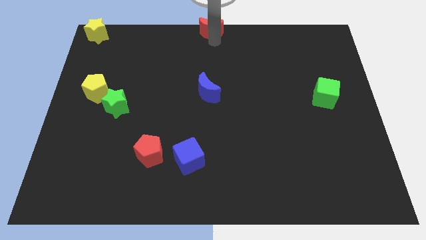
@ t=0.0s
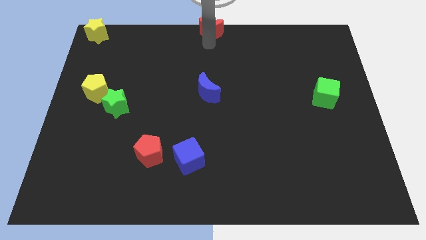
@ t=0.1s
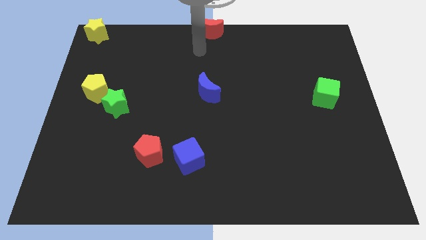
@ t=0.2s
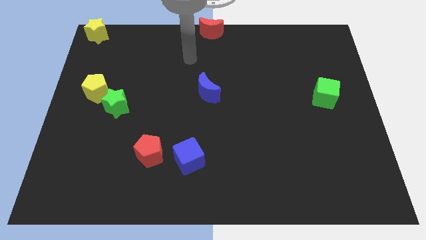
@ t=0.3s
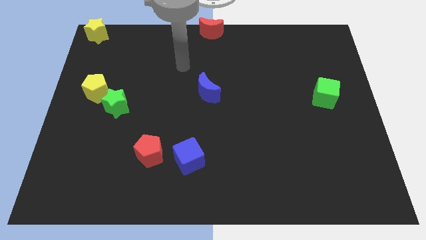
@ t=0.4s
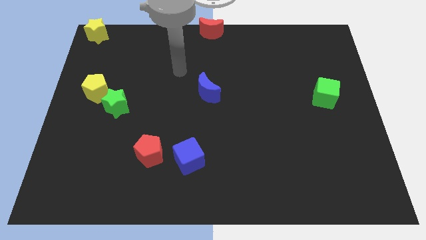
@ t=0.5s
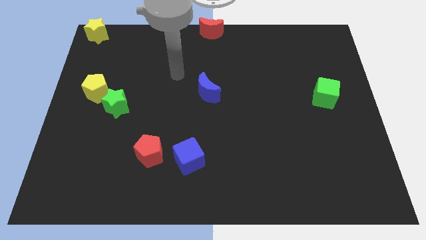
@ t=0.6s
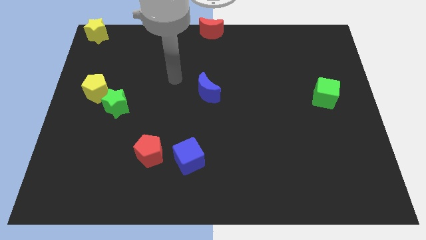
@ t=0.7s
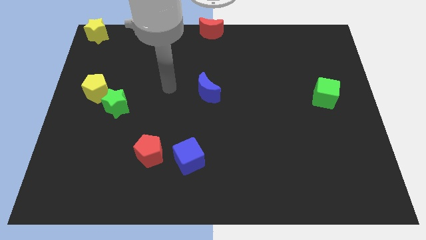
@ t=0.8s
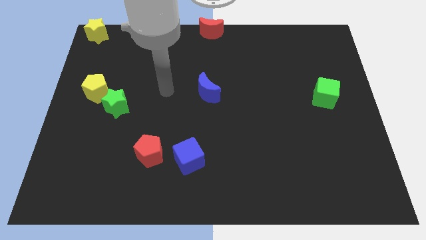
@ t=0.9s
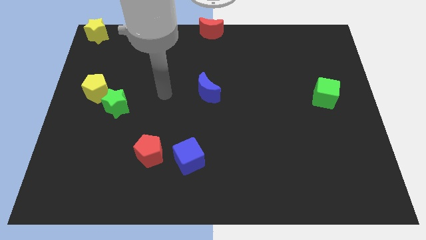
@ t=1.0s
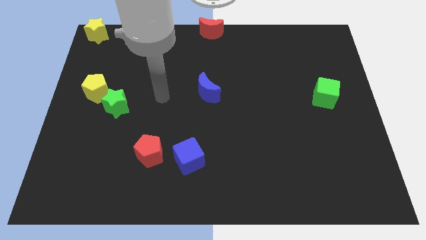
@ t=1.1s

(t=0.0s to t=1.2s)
move the arm away from the red moon

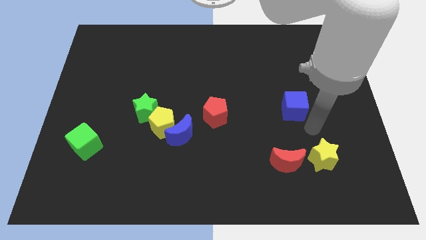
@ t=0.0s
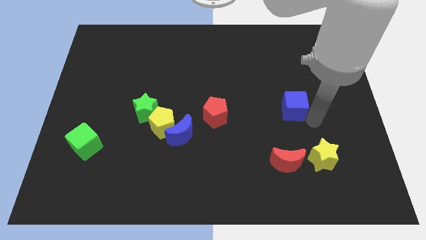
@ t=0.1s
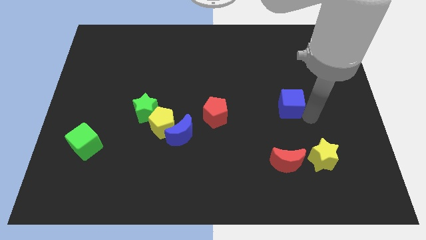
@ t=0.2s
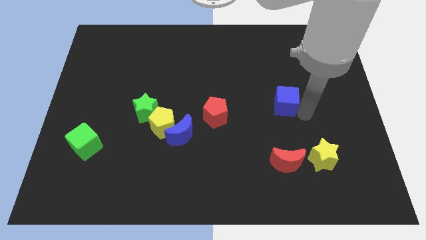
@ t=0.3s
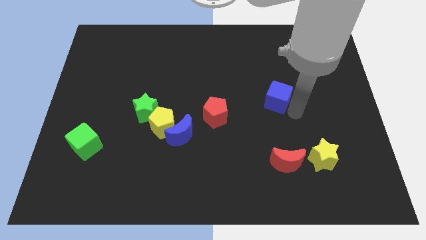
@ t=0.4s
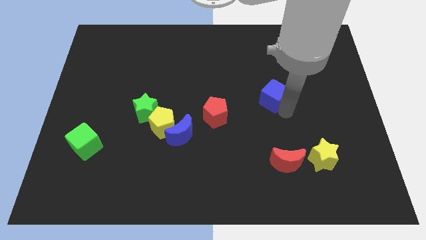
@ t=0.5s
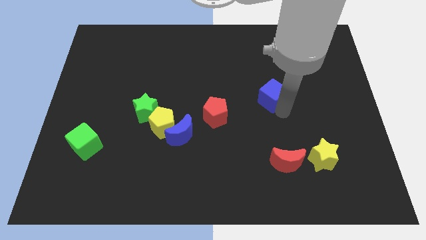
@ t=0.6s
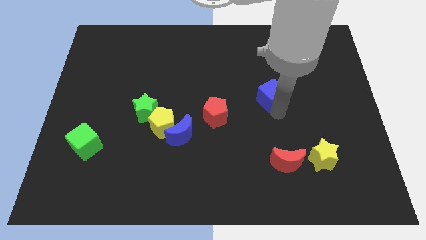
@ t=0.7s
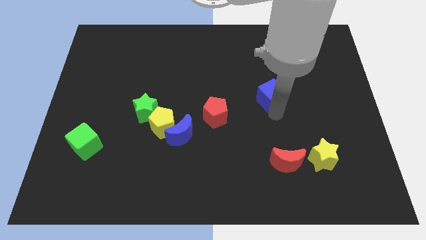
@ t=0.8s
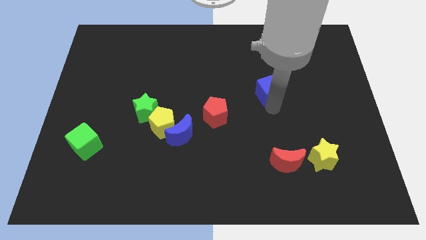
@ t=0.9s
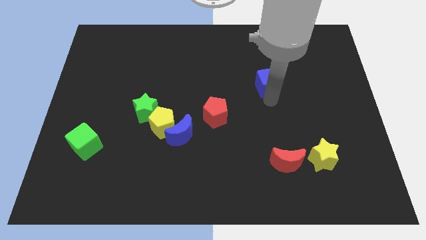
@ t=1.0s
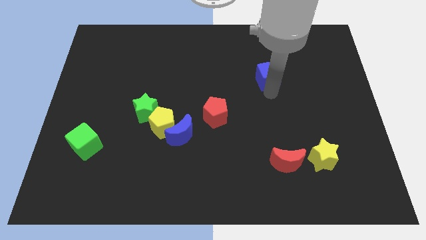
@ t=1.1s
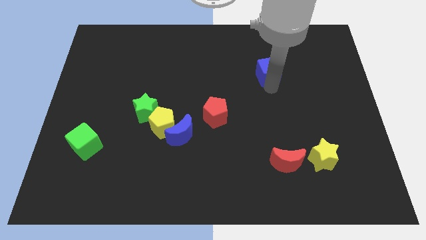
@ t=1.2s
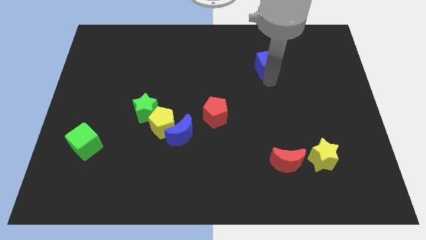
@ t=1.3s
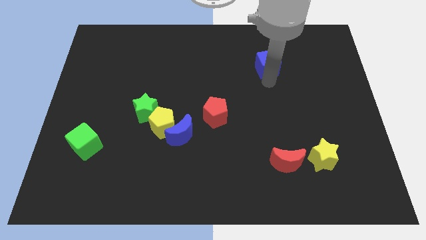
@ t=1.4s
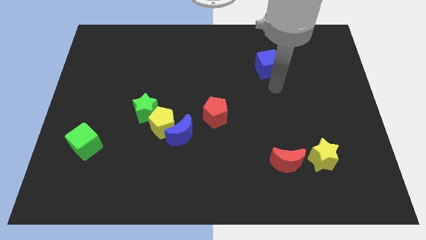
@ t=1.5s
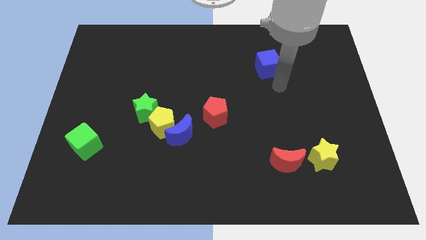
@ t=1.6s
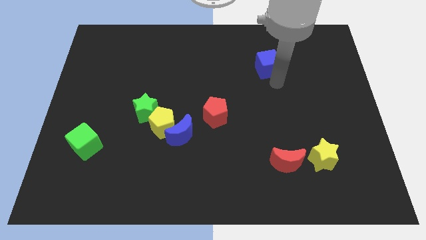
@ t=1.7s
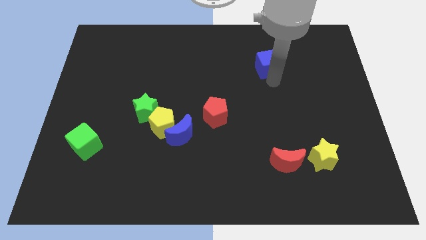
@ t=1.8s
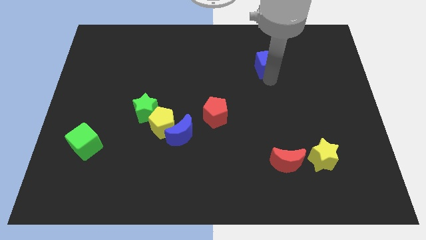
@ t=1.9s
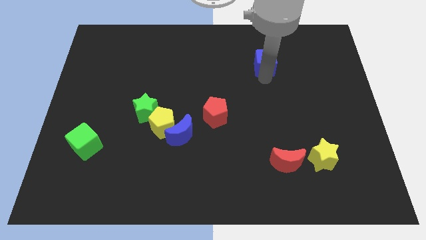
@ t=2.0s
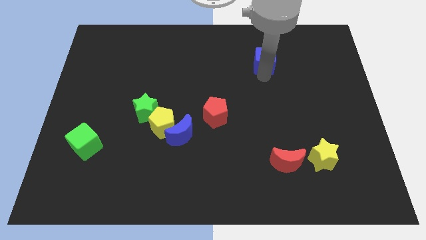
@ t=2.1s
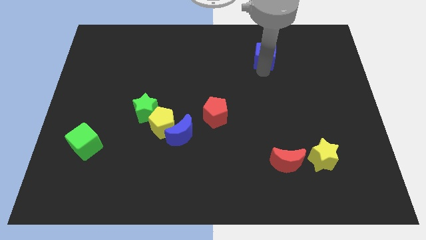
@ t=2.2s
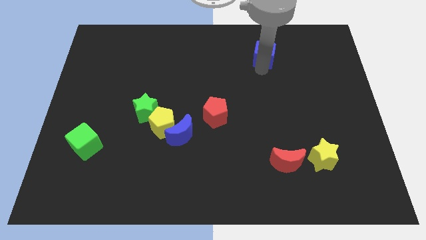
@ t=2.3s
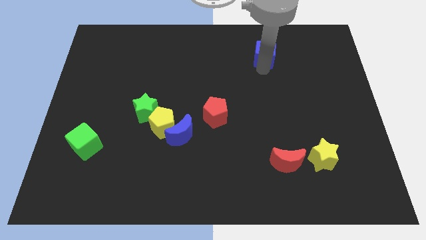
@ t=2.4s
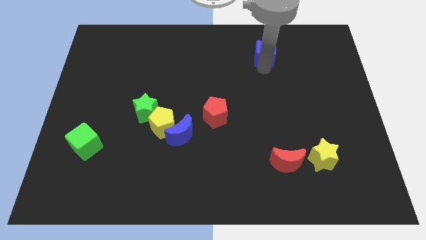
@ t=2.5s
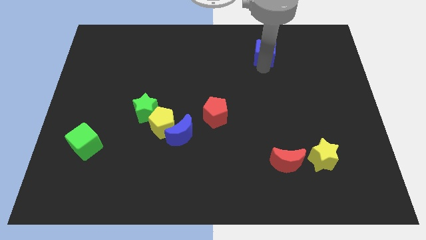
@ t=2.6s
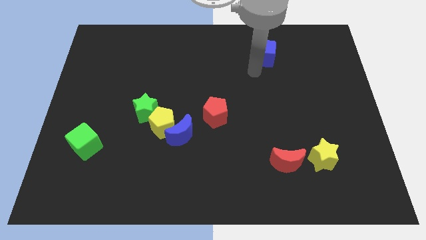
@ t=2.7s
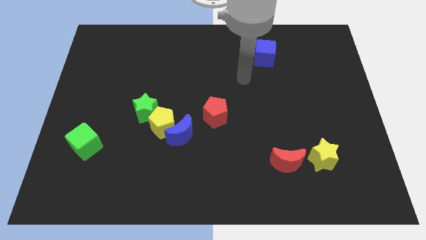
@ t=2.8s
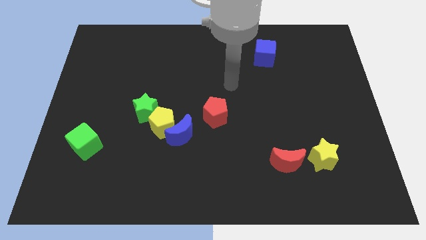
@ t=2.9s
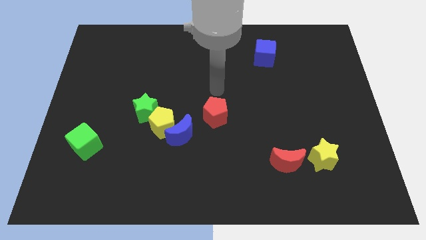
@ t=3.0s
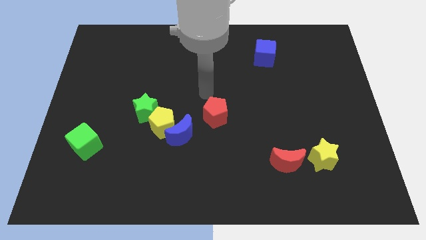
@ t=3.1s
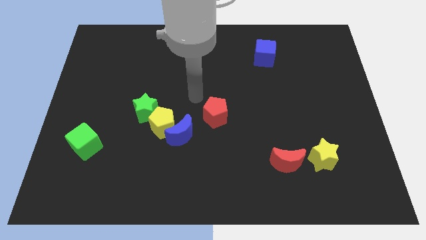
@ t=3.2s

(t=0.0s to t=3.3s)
place the blue cube above the red pentagon

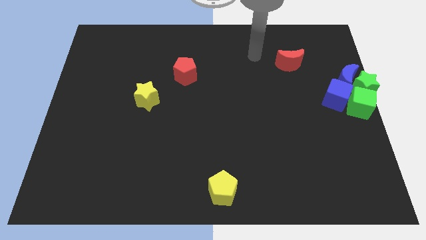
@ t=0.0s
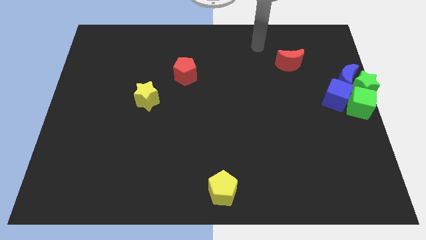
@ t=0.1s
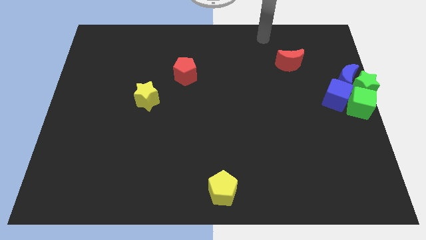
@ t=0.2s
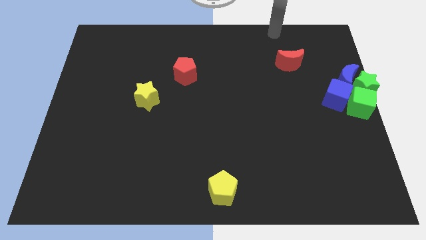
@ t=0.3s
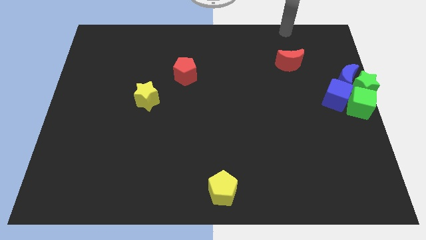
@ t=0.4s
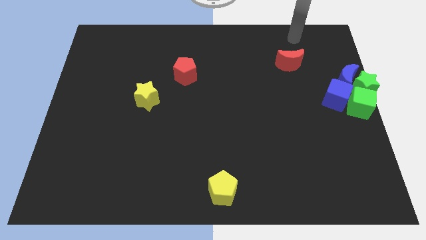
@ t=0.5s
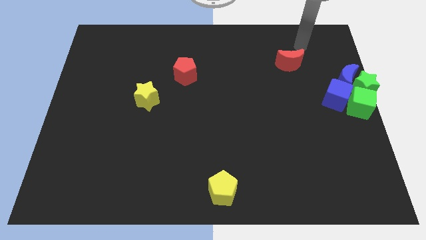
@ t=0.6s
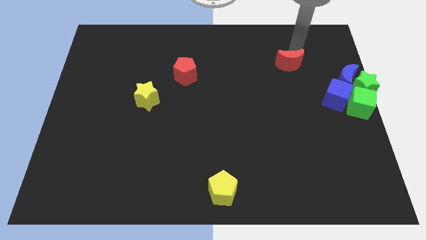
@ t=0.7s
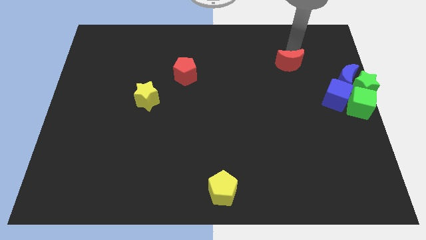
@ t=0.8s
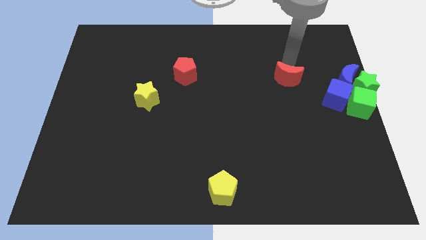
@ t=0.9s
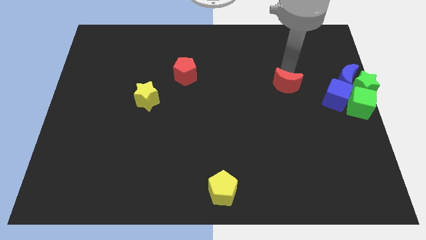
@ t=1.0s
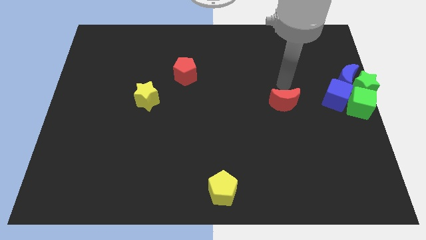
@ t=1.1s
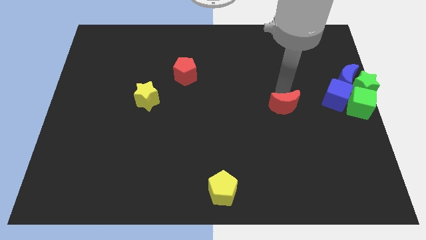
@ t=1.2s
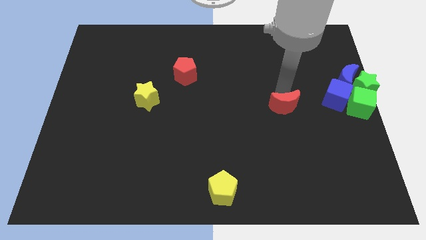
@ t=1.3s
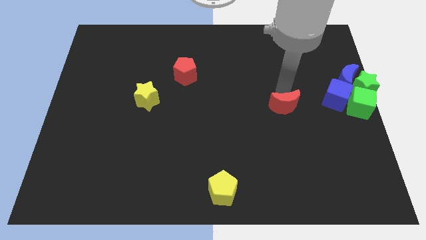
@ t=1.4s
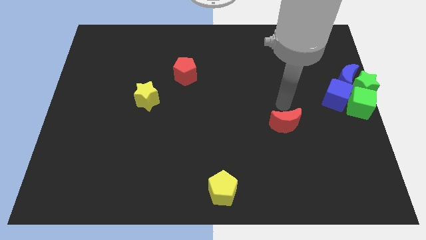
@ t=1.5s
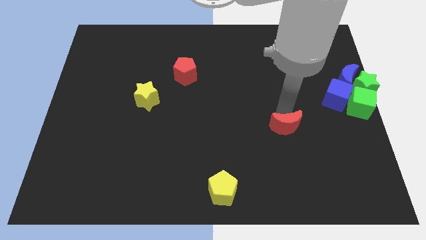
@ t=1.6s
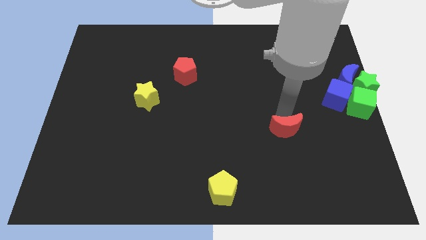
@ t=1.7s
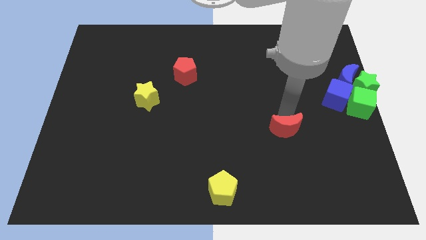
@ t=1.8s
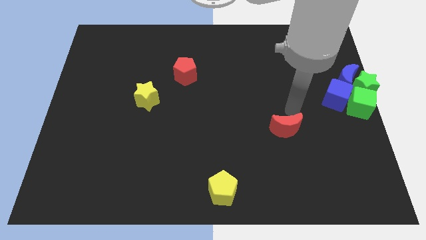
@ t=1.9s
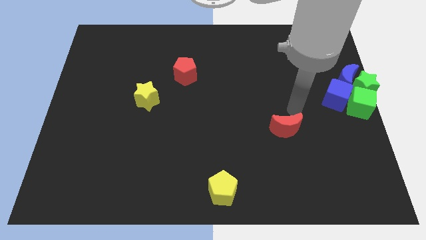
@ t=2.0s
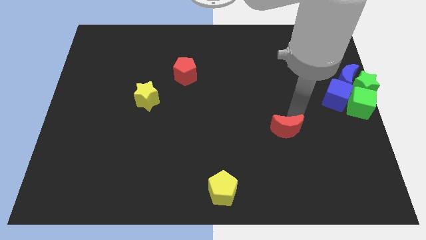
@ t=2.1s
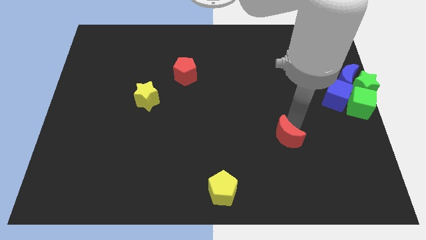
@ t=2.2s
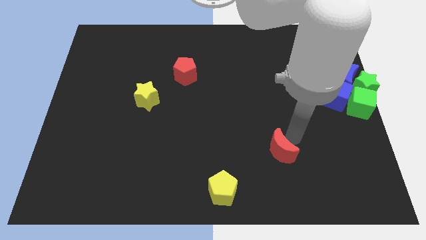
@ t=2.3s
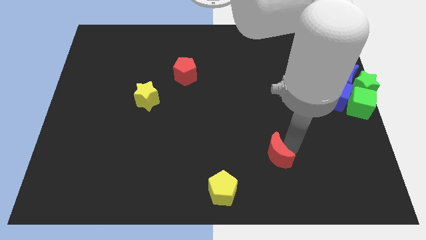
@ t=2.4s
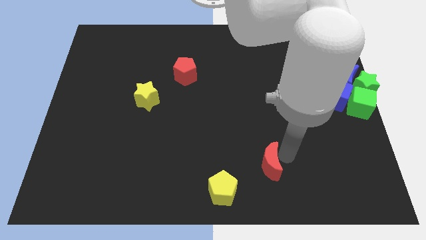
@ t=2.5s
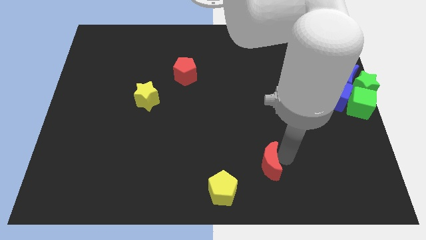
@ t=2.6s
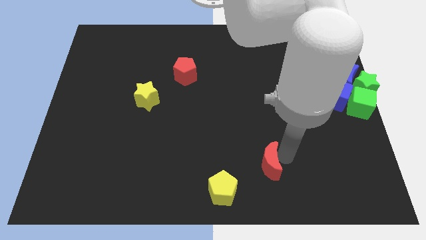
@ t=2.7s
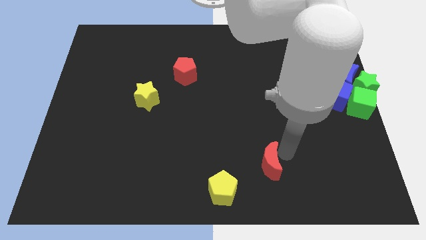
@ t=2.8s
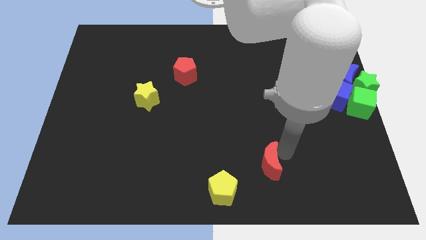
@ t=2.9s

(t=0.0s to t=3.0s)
place the red crescent towards the top right side of the yellow pentagon

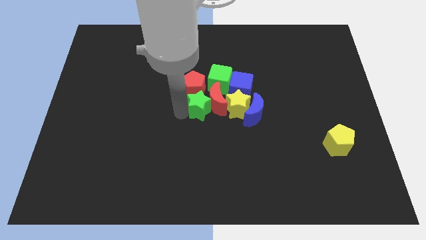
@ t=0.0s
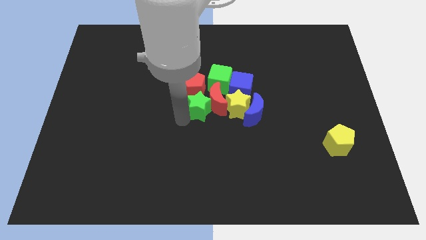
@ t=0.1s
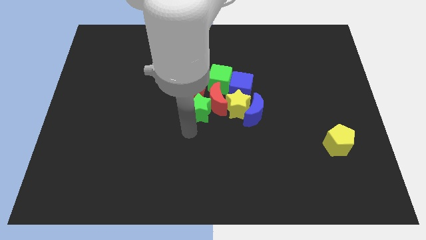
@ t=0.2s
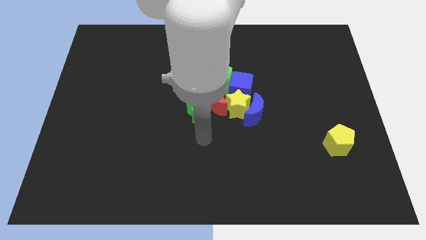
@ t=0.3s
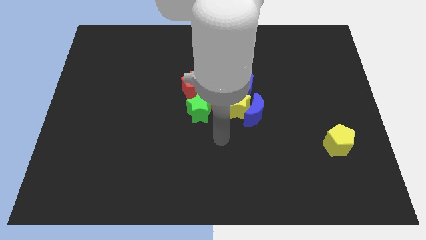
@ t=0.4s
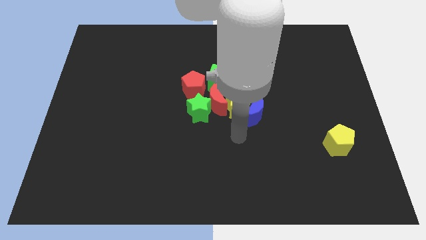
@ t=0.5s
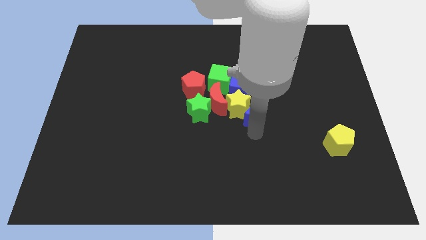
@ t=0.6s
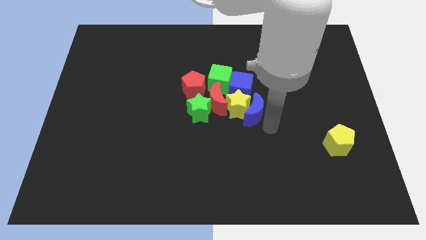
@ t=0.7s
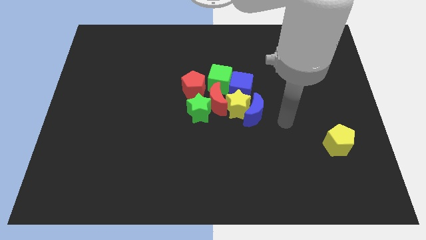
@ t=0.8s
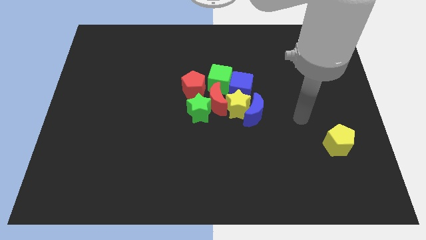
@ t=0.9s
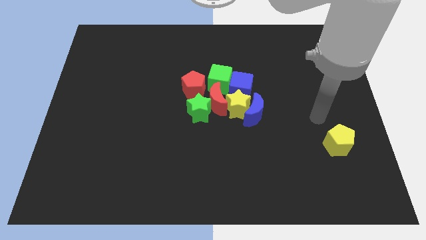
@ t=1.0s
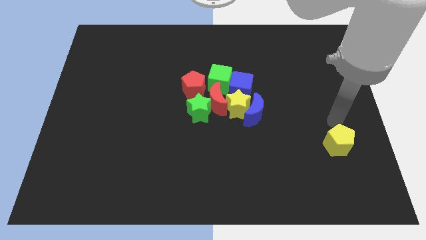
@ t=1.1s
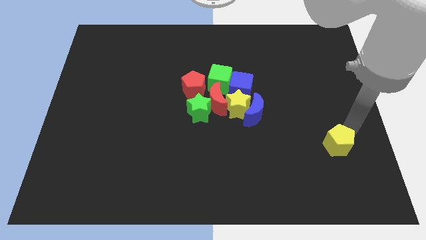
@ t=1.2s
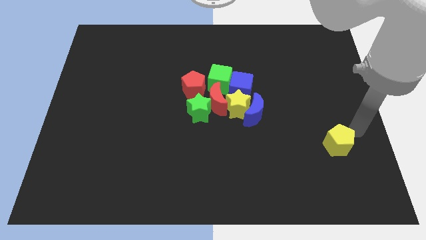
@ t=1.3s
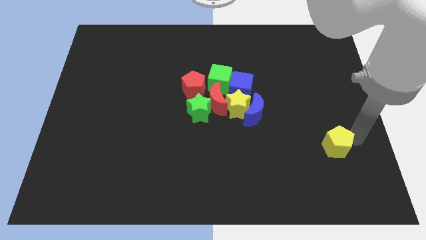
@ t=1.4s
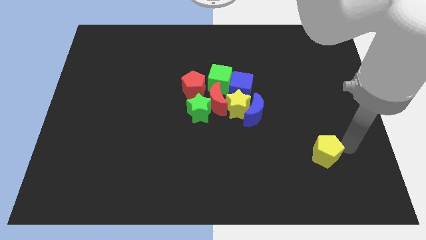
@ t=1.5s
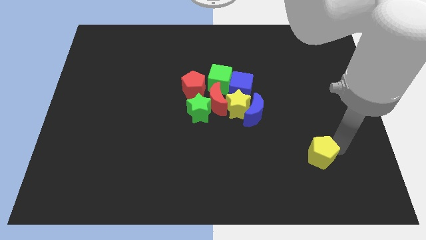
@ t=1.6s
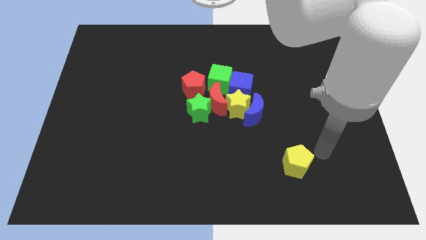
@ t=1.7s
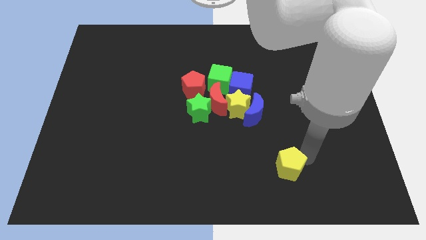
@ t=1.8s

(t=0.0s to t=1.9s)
move yellow pentagon slightly left
